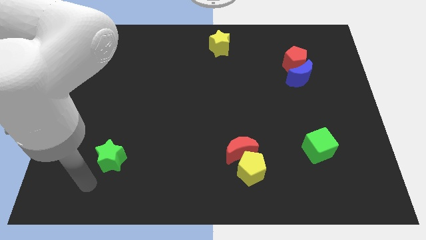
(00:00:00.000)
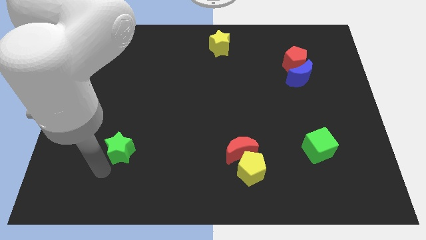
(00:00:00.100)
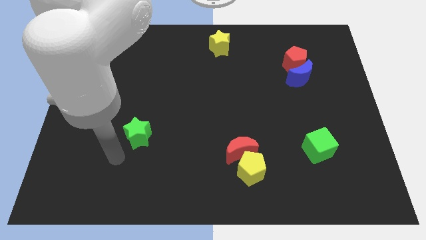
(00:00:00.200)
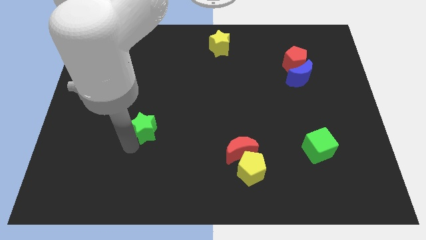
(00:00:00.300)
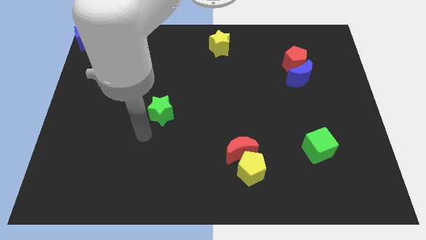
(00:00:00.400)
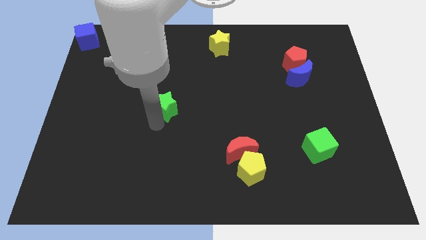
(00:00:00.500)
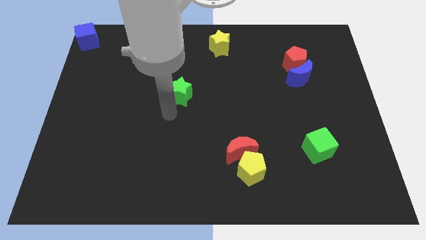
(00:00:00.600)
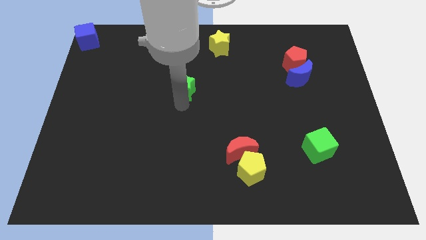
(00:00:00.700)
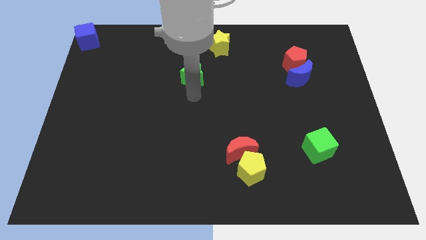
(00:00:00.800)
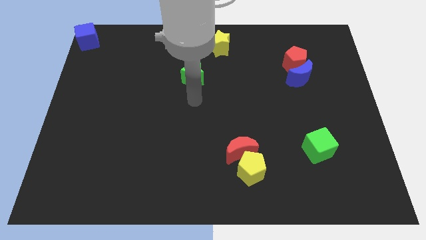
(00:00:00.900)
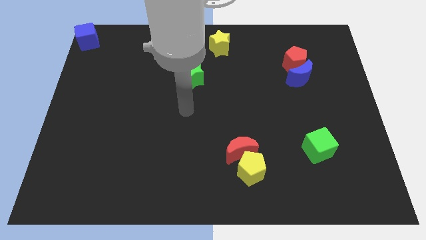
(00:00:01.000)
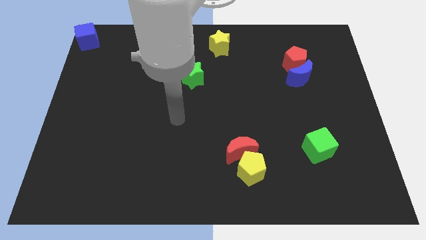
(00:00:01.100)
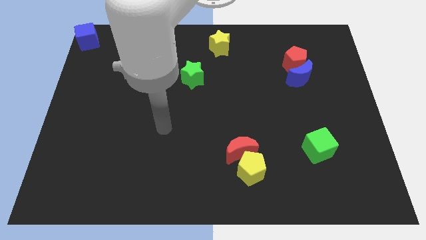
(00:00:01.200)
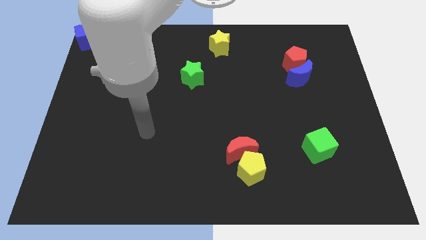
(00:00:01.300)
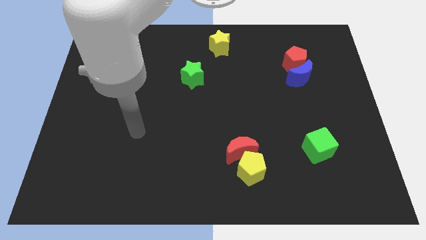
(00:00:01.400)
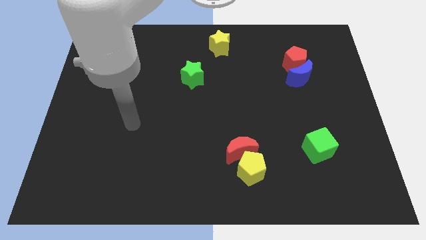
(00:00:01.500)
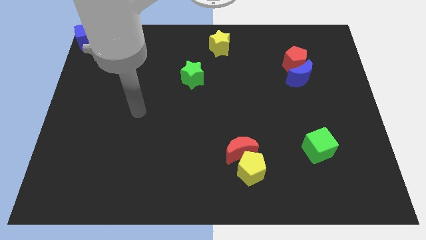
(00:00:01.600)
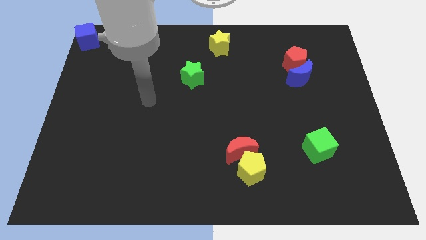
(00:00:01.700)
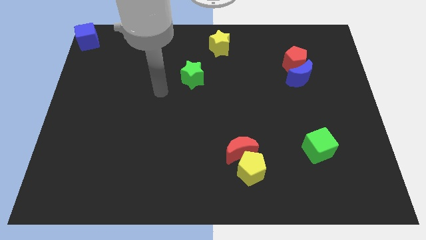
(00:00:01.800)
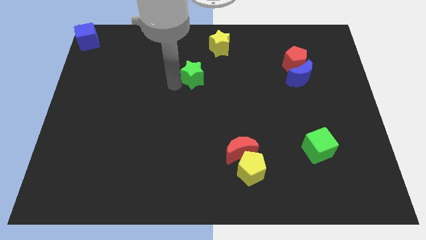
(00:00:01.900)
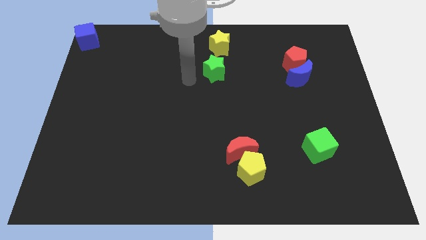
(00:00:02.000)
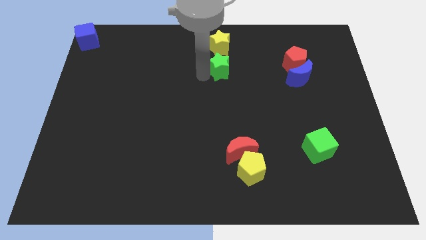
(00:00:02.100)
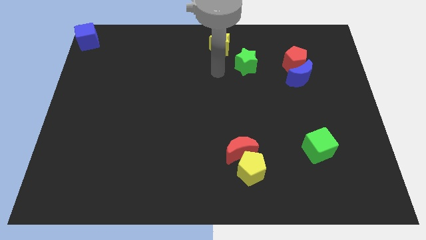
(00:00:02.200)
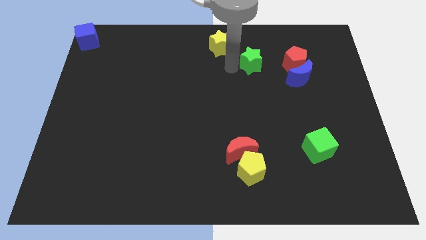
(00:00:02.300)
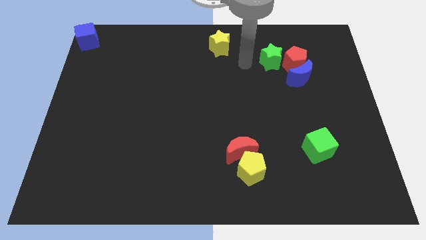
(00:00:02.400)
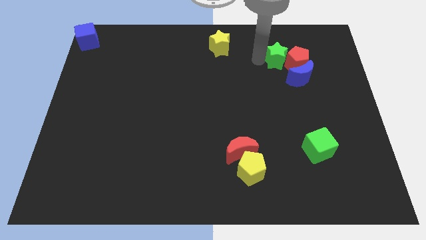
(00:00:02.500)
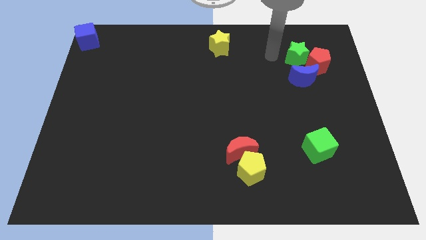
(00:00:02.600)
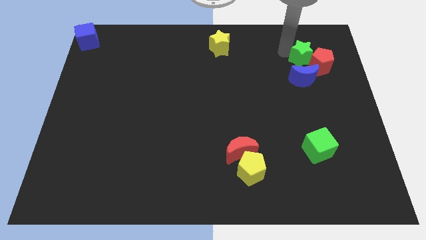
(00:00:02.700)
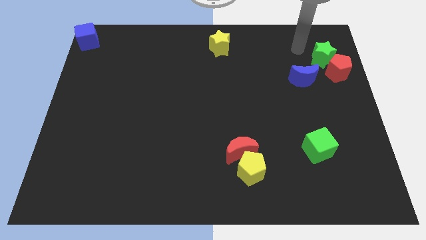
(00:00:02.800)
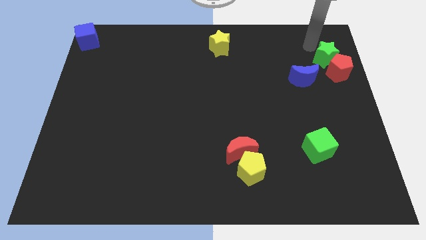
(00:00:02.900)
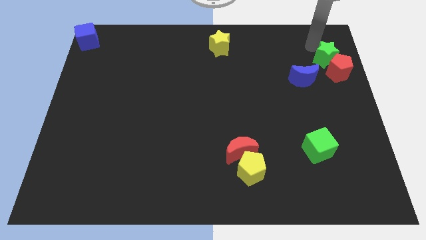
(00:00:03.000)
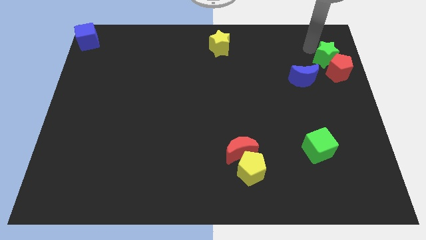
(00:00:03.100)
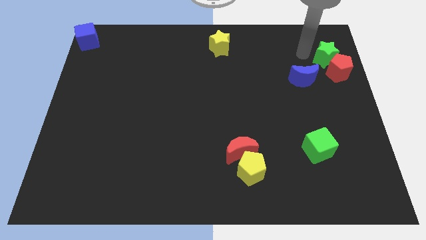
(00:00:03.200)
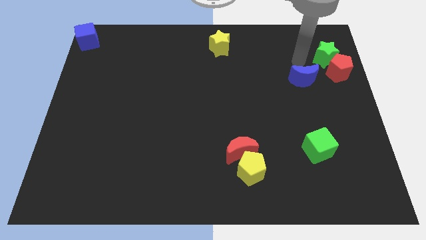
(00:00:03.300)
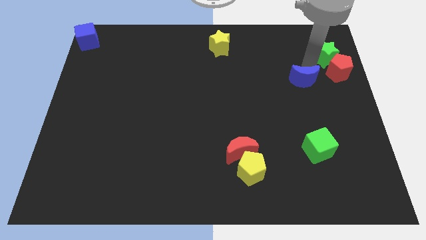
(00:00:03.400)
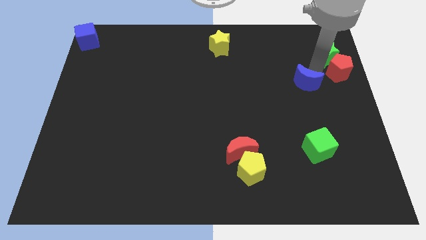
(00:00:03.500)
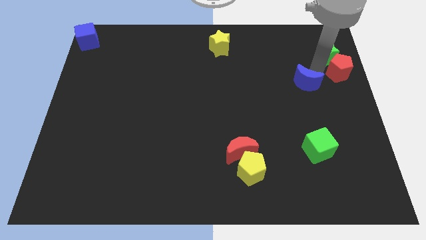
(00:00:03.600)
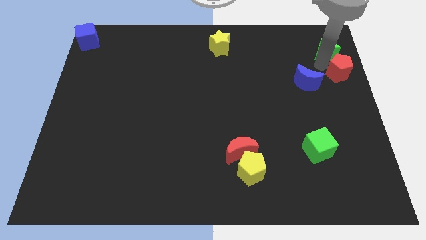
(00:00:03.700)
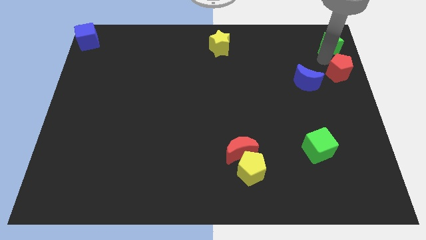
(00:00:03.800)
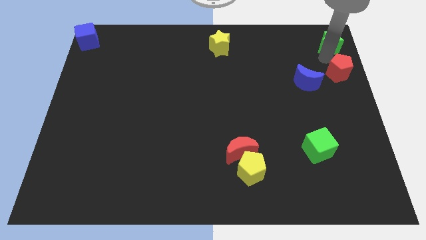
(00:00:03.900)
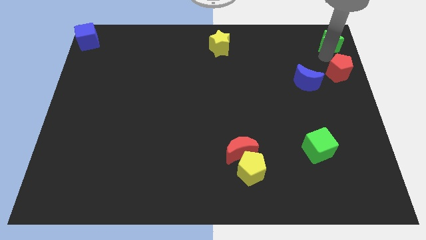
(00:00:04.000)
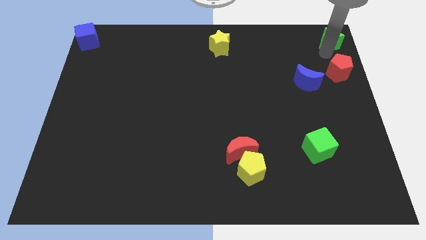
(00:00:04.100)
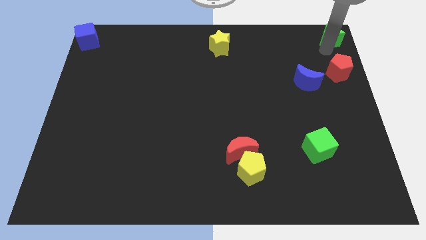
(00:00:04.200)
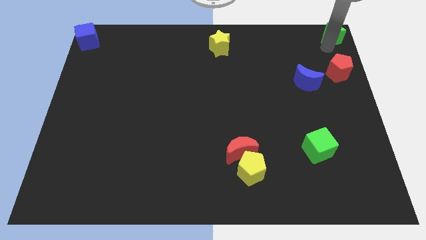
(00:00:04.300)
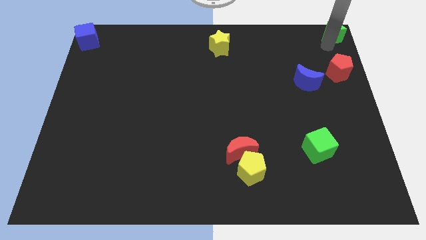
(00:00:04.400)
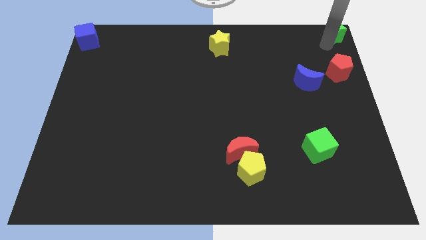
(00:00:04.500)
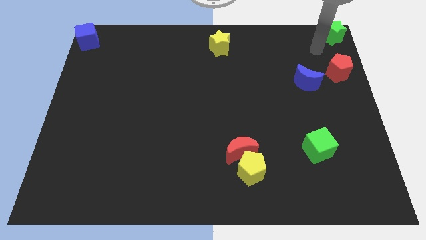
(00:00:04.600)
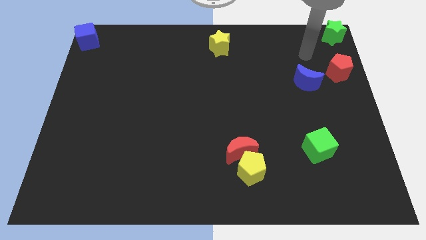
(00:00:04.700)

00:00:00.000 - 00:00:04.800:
push the green star to the top right corner

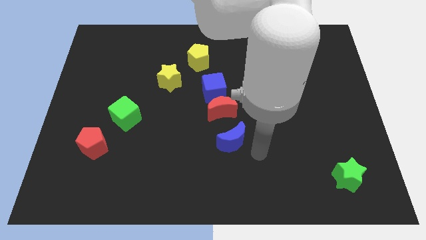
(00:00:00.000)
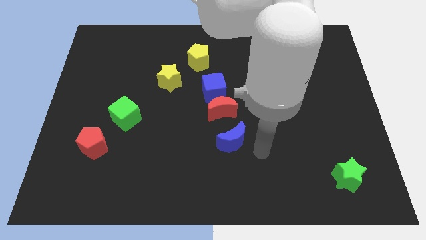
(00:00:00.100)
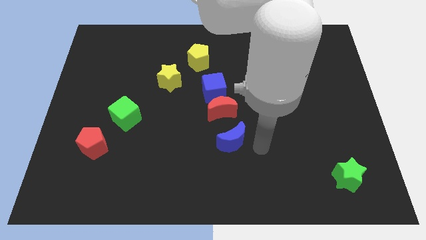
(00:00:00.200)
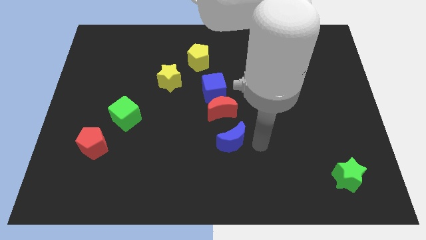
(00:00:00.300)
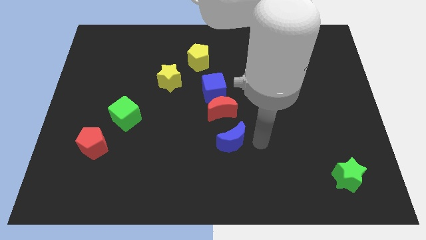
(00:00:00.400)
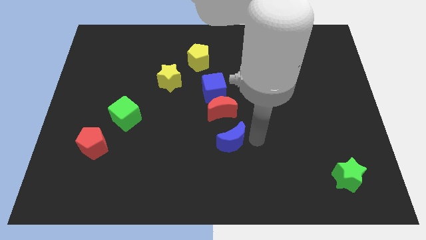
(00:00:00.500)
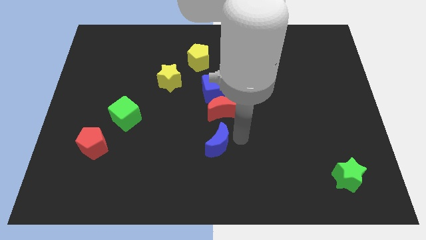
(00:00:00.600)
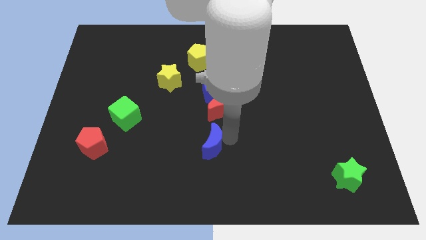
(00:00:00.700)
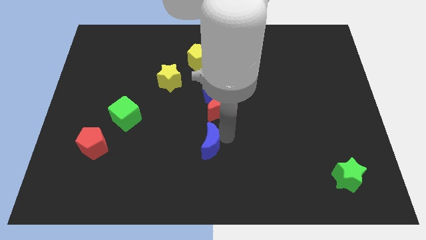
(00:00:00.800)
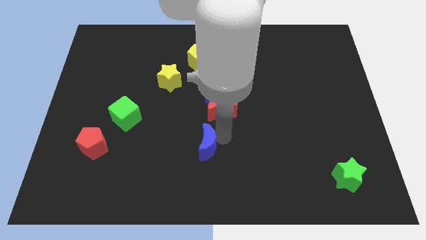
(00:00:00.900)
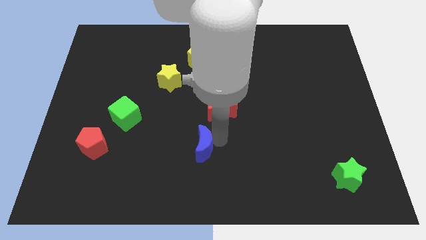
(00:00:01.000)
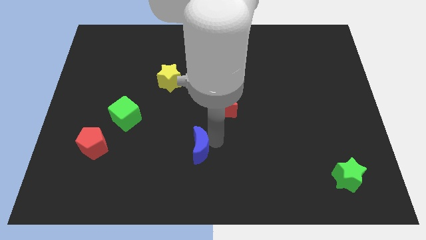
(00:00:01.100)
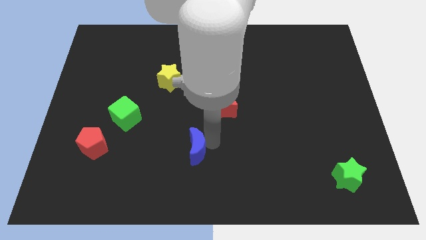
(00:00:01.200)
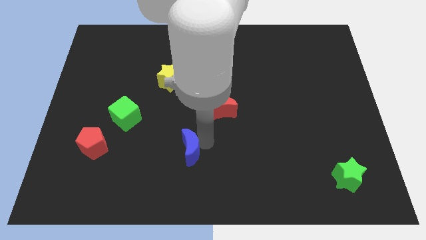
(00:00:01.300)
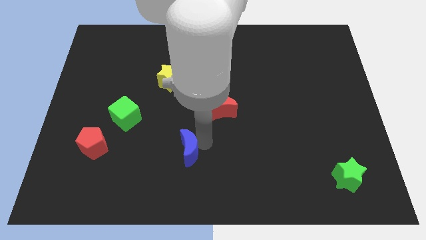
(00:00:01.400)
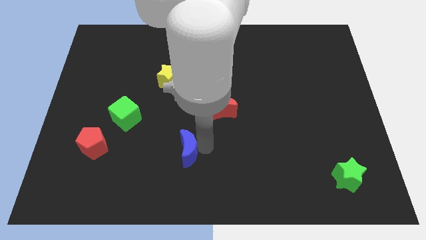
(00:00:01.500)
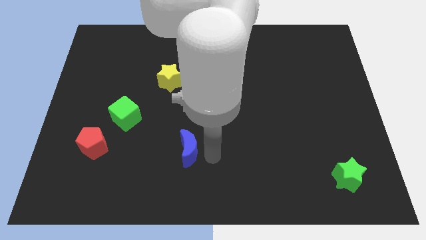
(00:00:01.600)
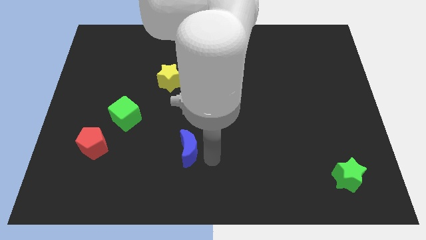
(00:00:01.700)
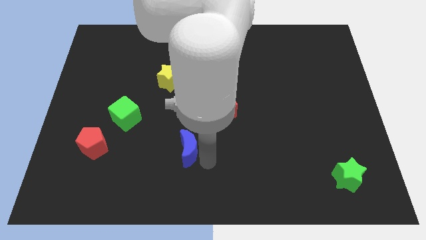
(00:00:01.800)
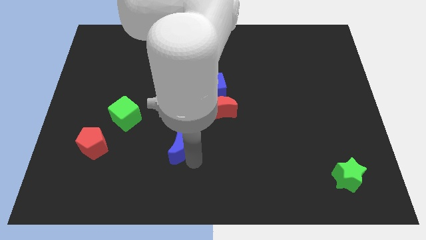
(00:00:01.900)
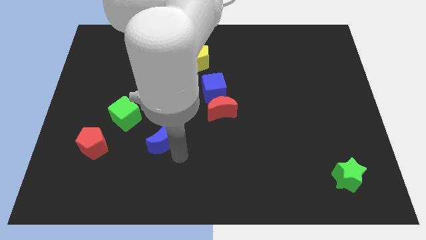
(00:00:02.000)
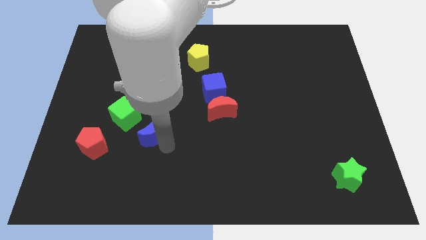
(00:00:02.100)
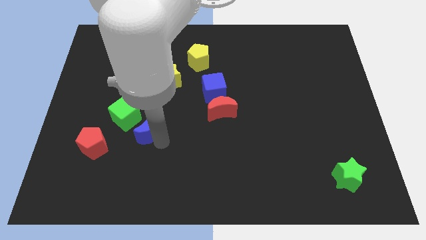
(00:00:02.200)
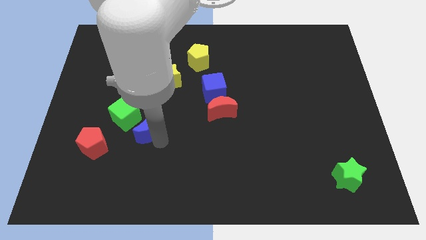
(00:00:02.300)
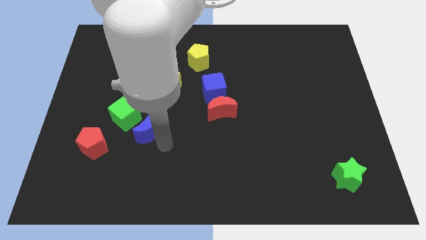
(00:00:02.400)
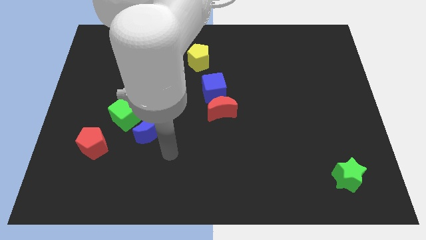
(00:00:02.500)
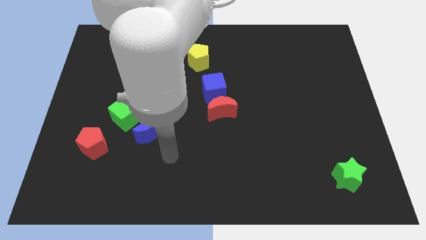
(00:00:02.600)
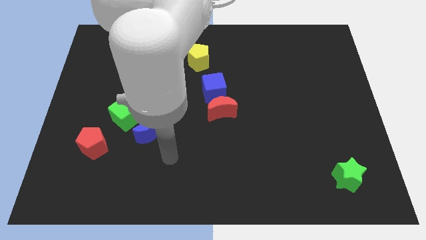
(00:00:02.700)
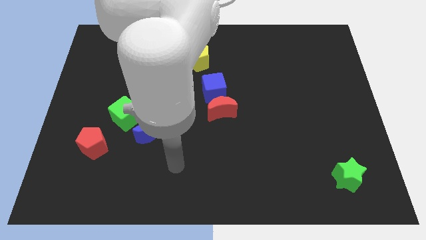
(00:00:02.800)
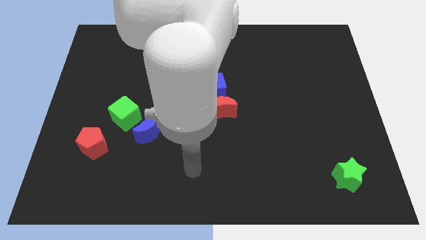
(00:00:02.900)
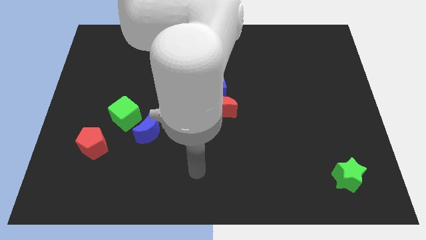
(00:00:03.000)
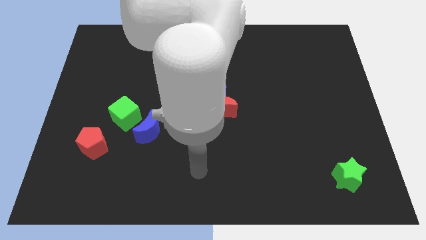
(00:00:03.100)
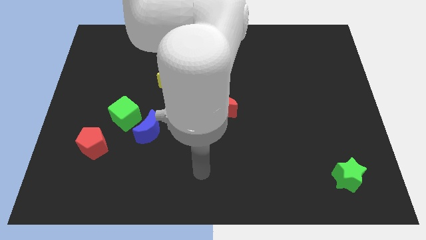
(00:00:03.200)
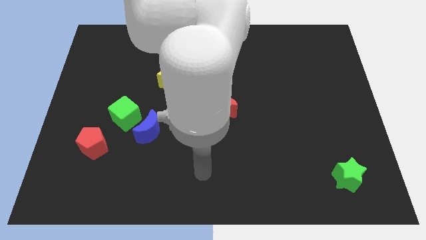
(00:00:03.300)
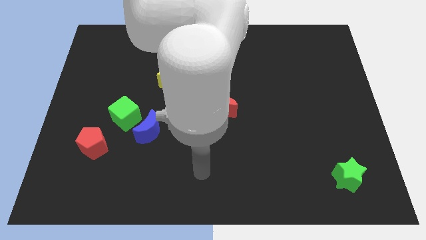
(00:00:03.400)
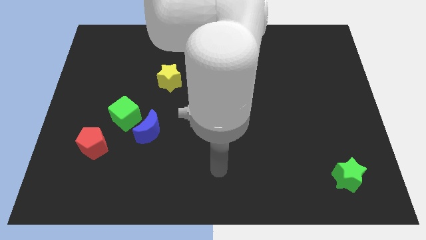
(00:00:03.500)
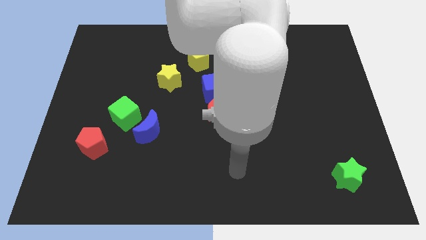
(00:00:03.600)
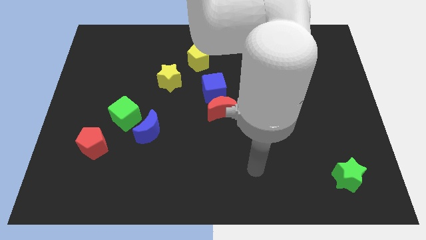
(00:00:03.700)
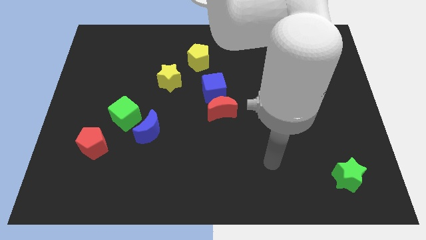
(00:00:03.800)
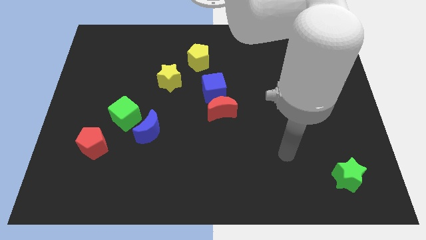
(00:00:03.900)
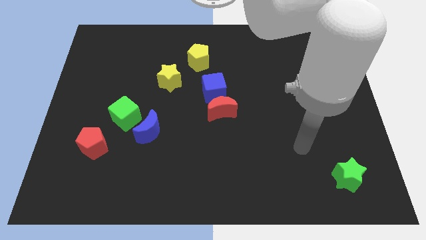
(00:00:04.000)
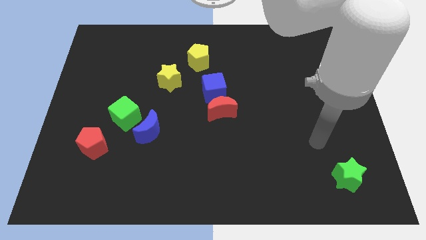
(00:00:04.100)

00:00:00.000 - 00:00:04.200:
push the blue moon towards the green cube
